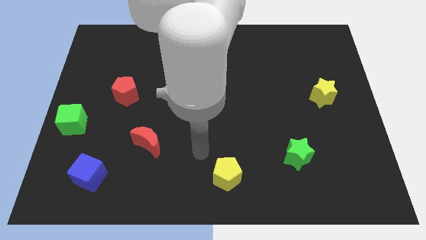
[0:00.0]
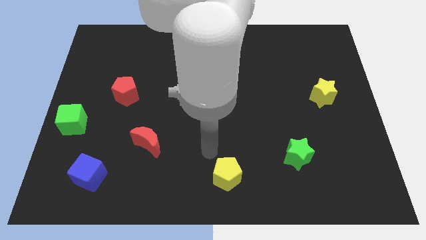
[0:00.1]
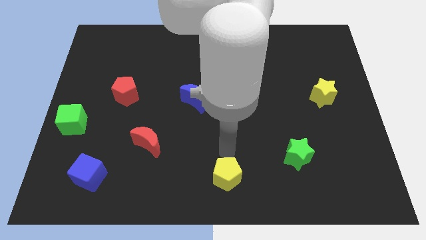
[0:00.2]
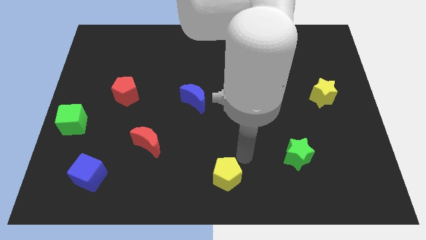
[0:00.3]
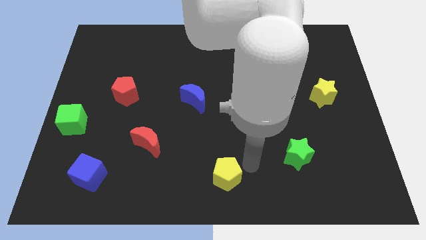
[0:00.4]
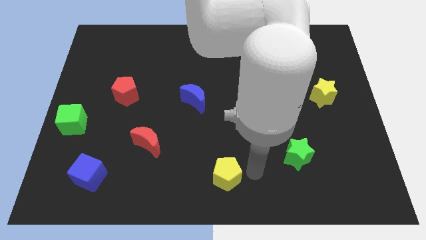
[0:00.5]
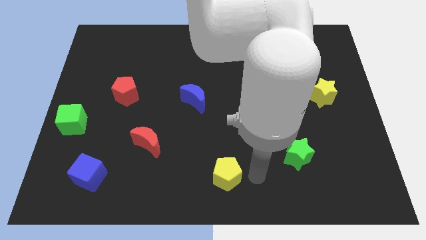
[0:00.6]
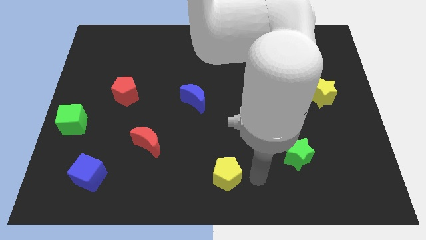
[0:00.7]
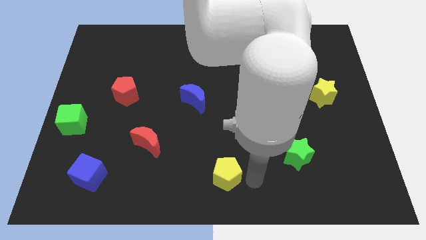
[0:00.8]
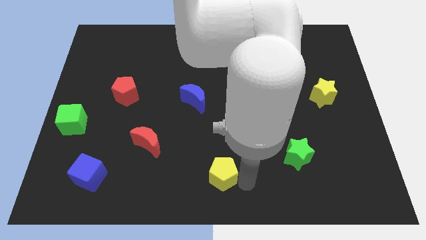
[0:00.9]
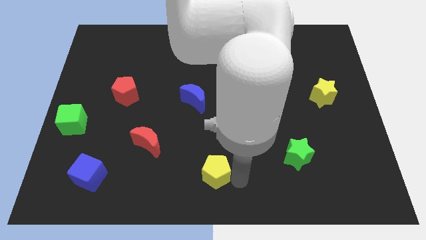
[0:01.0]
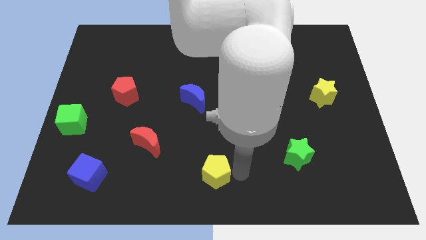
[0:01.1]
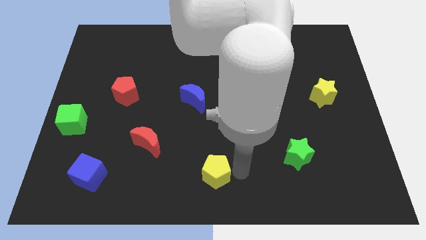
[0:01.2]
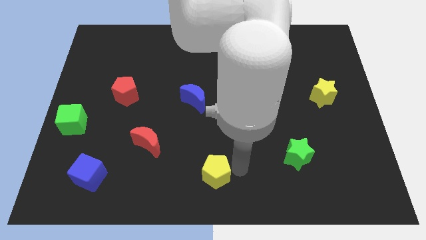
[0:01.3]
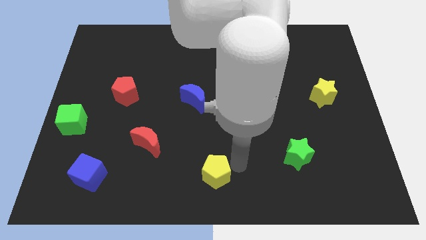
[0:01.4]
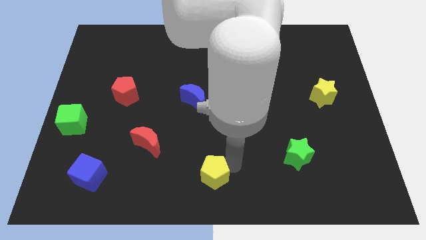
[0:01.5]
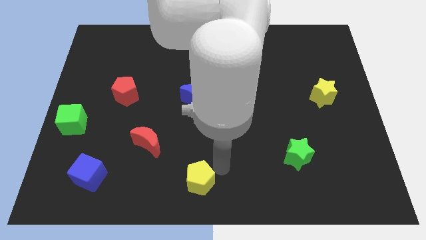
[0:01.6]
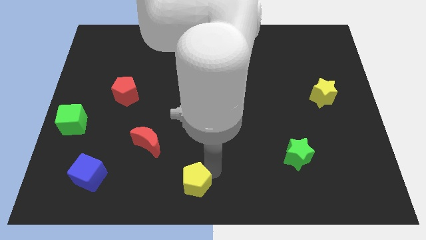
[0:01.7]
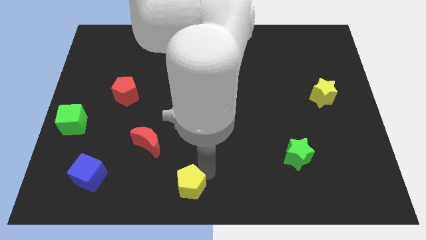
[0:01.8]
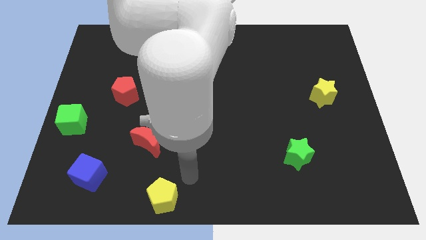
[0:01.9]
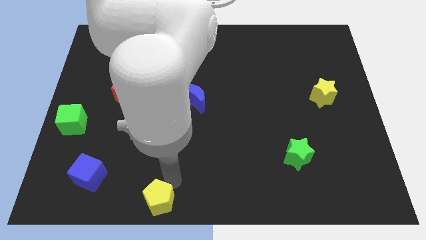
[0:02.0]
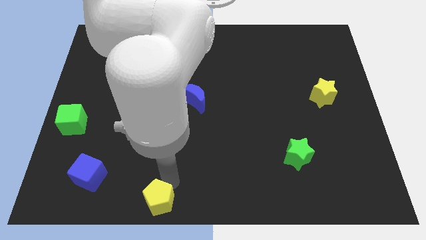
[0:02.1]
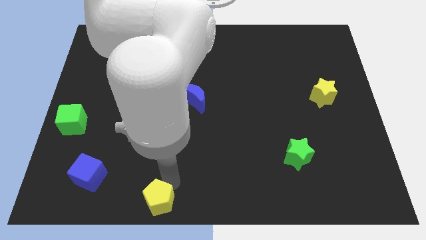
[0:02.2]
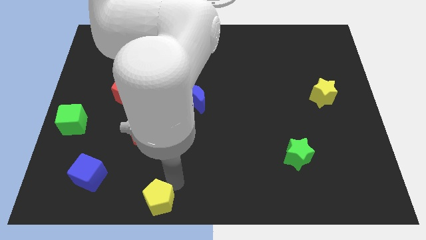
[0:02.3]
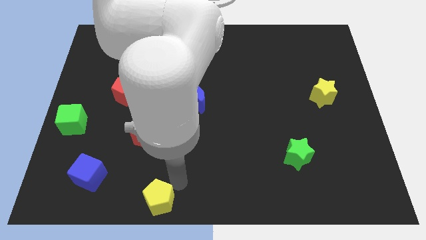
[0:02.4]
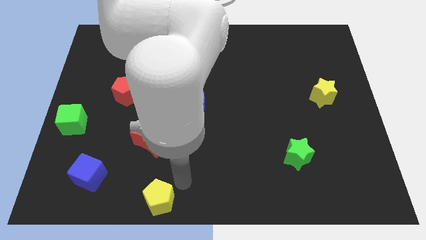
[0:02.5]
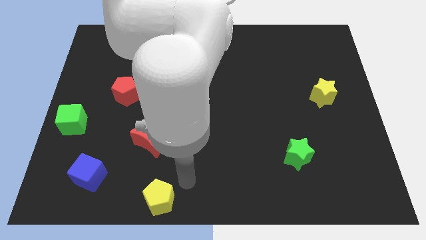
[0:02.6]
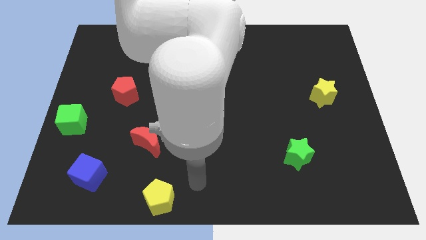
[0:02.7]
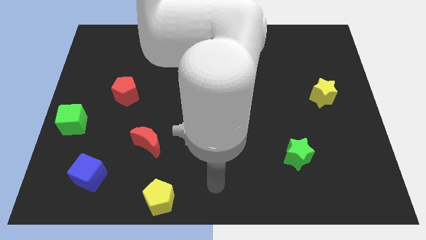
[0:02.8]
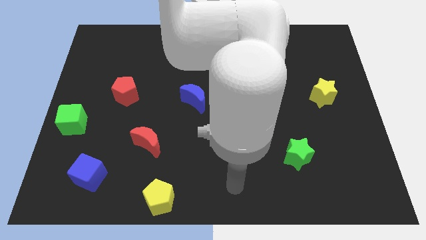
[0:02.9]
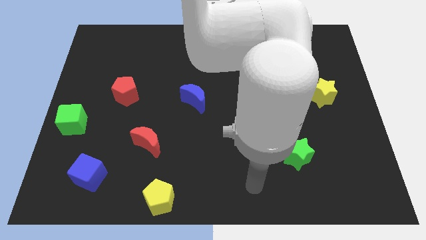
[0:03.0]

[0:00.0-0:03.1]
push the yellow pentagon towards the bottom left

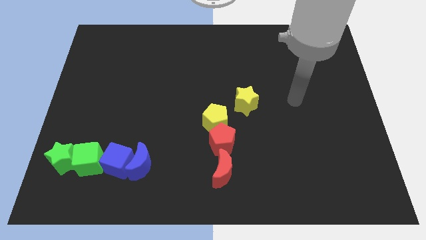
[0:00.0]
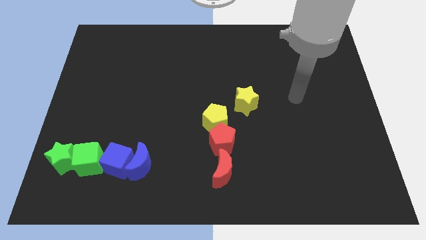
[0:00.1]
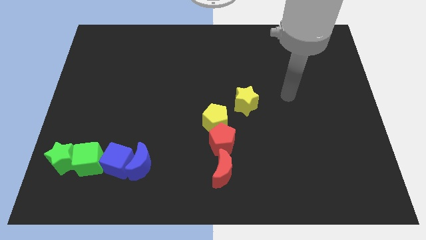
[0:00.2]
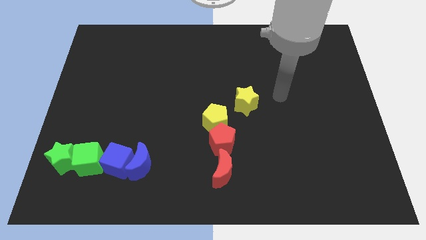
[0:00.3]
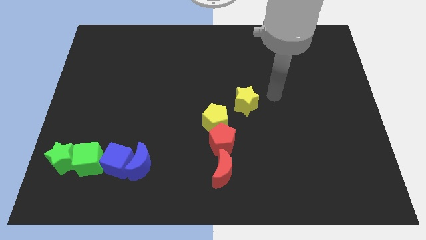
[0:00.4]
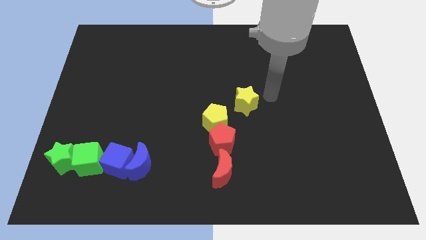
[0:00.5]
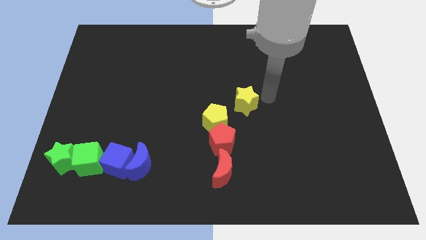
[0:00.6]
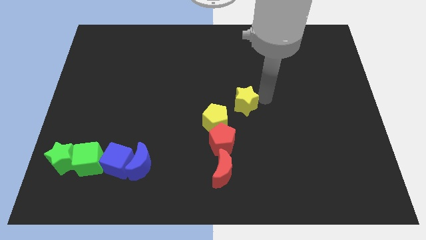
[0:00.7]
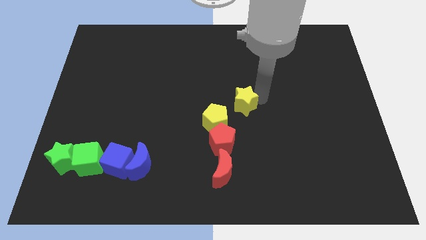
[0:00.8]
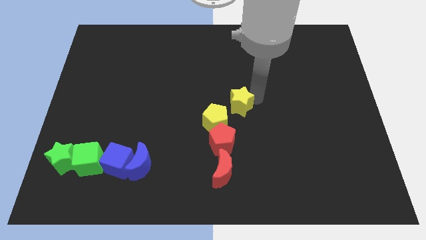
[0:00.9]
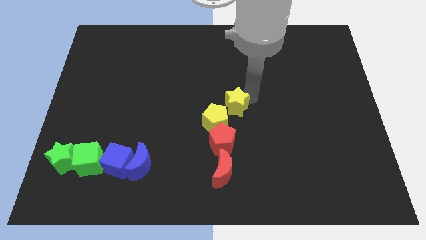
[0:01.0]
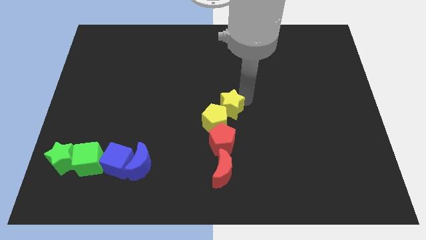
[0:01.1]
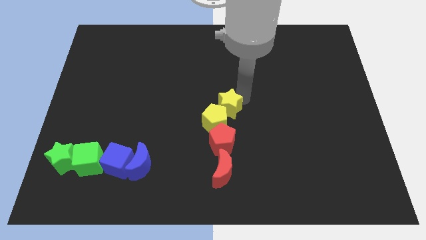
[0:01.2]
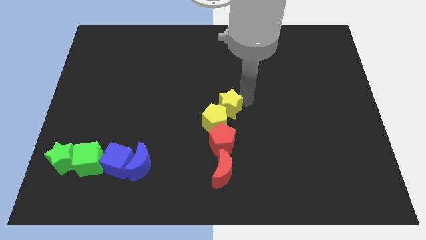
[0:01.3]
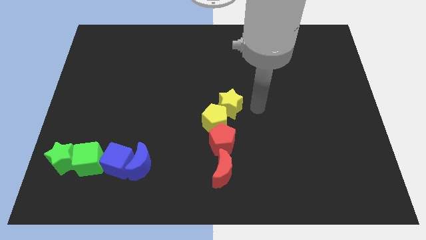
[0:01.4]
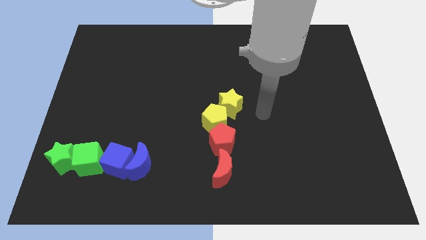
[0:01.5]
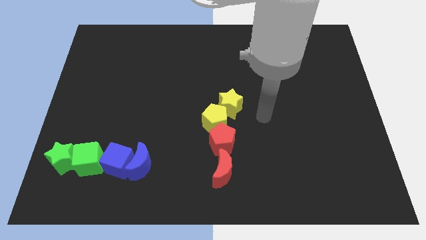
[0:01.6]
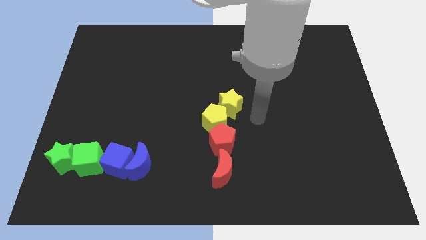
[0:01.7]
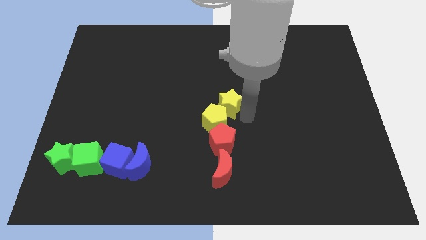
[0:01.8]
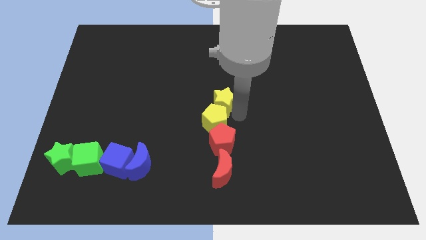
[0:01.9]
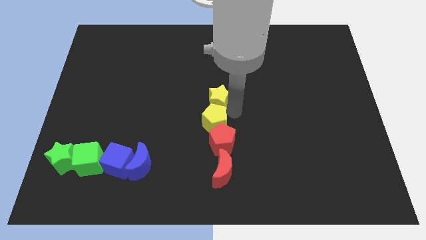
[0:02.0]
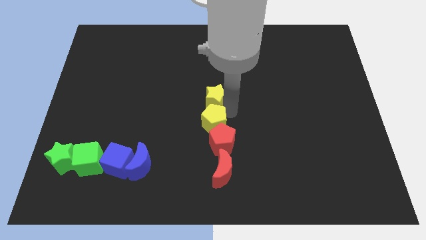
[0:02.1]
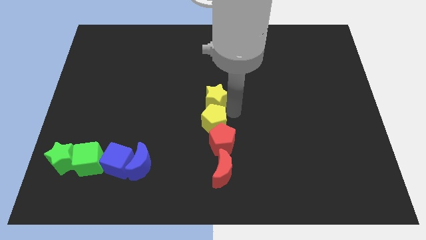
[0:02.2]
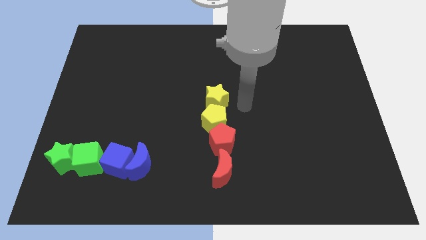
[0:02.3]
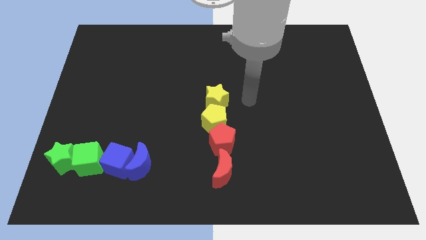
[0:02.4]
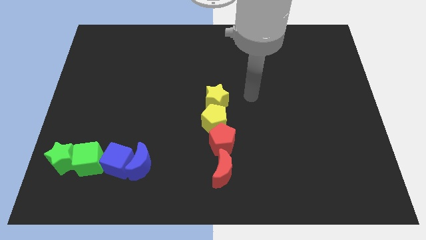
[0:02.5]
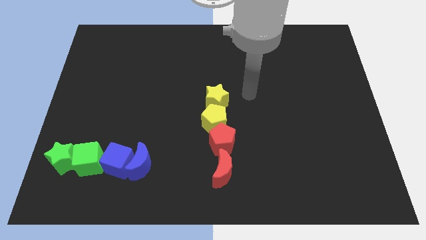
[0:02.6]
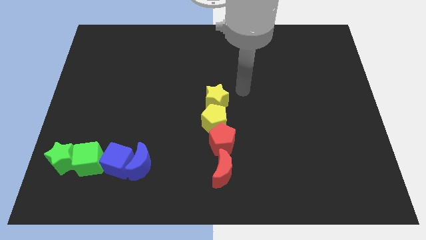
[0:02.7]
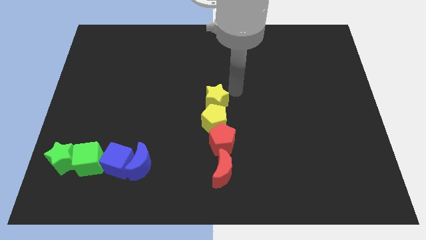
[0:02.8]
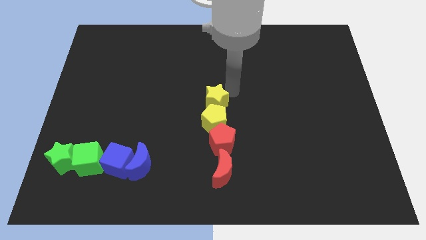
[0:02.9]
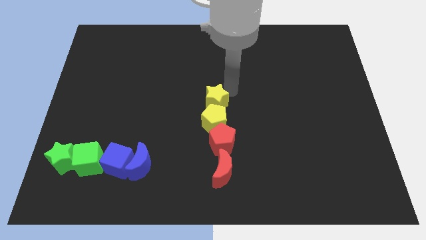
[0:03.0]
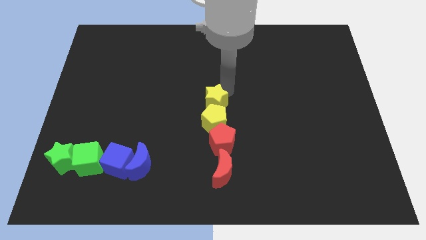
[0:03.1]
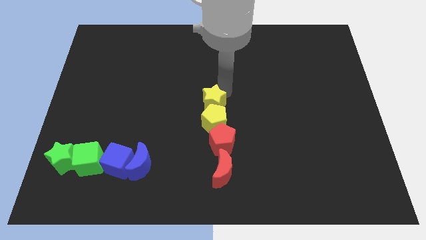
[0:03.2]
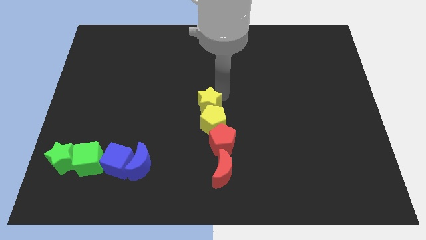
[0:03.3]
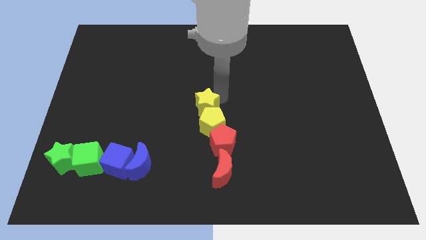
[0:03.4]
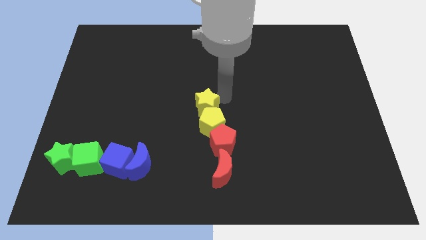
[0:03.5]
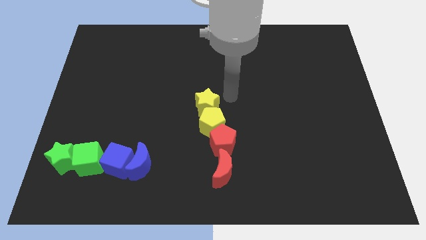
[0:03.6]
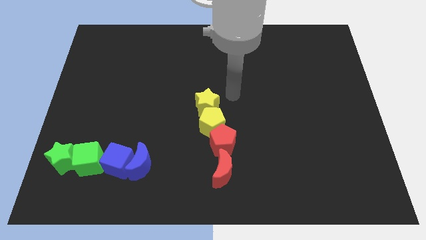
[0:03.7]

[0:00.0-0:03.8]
move the yellow star to the center

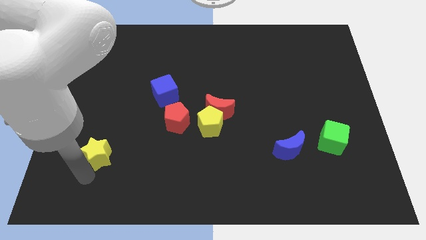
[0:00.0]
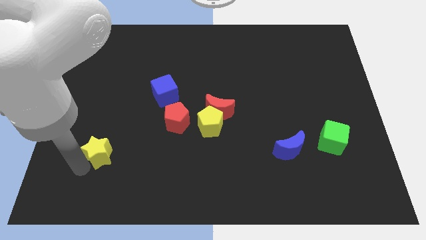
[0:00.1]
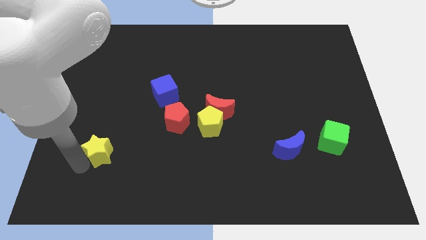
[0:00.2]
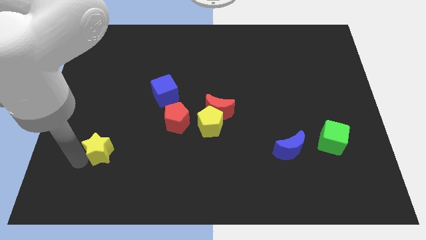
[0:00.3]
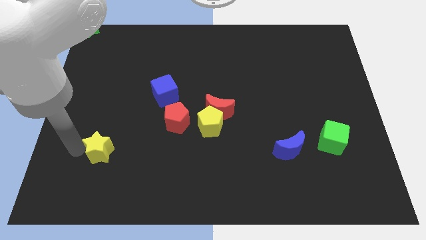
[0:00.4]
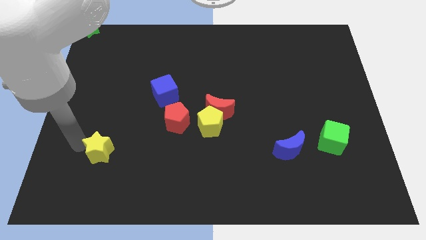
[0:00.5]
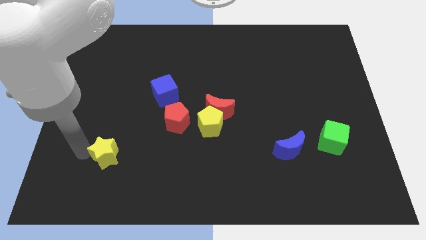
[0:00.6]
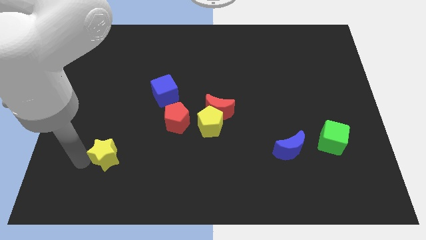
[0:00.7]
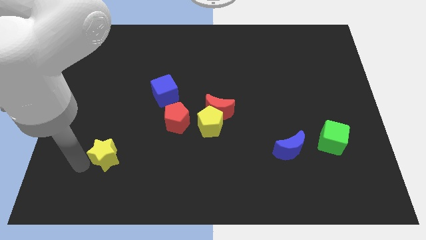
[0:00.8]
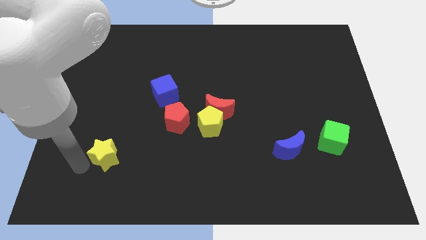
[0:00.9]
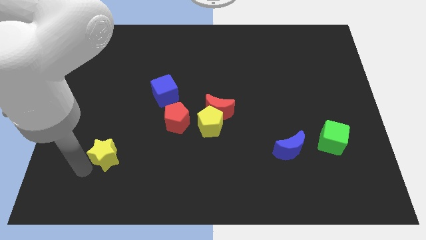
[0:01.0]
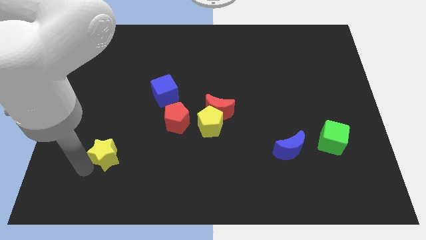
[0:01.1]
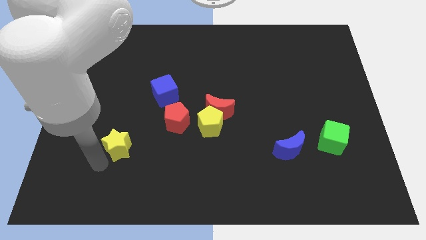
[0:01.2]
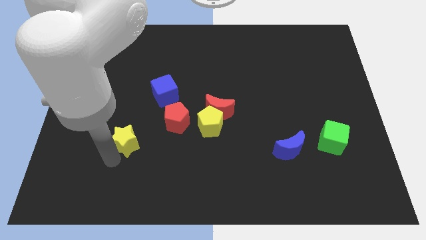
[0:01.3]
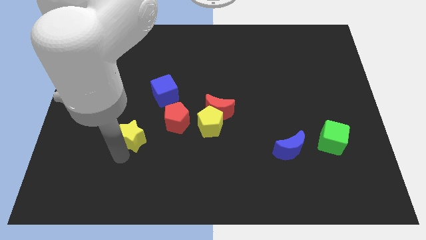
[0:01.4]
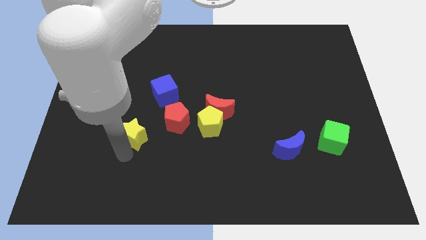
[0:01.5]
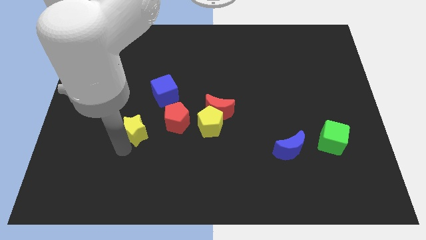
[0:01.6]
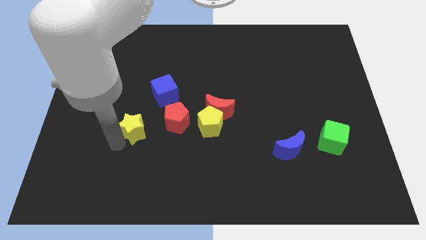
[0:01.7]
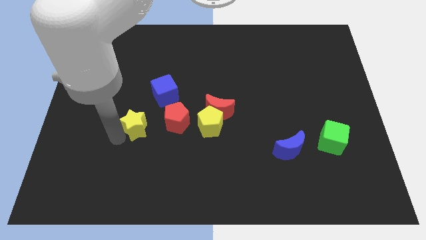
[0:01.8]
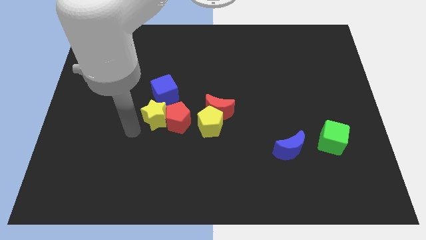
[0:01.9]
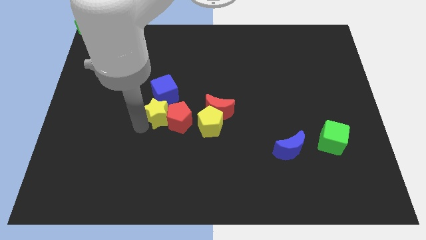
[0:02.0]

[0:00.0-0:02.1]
push the yellow star into the red pentagon and blue cube
